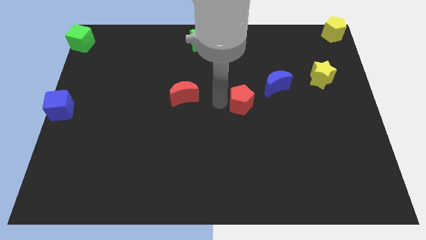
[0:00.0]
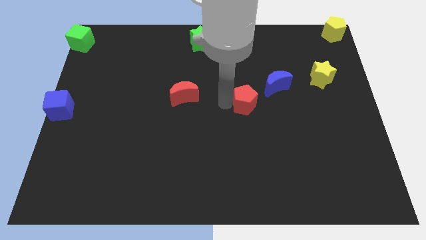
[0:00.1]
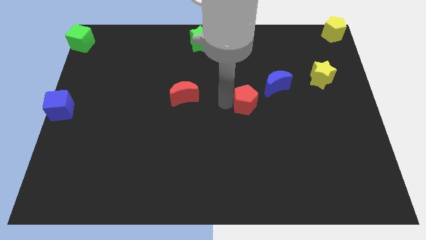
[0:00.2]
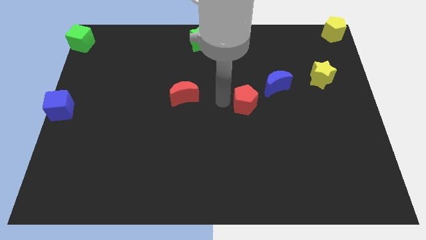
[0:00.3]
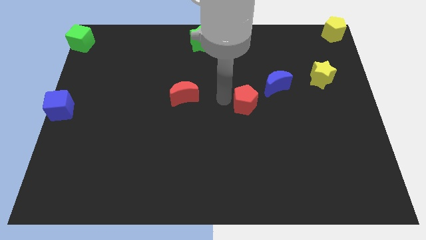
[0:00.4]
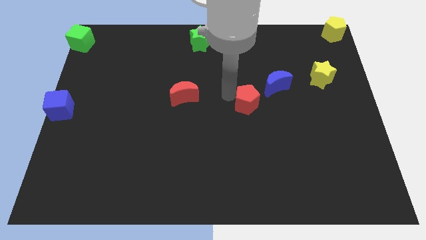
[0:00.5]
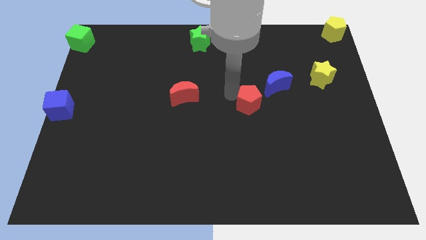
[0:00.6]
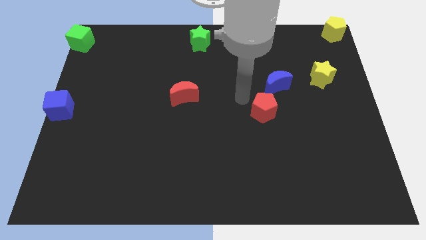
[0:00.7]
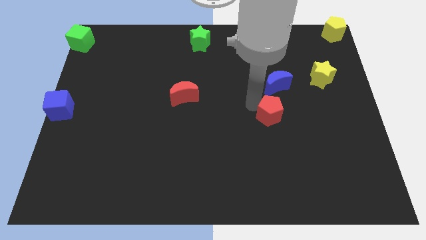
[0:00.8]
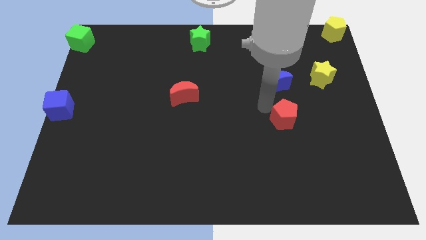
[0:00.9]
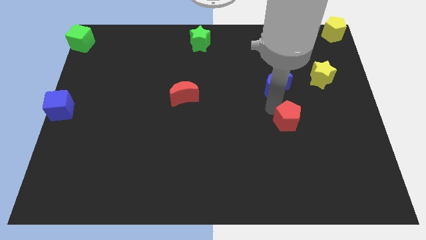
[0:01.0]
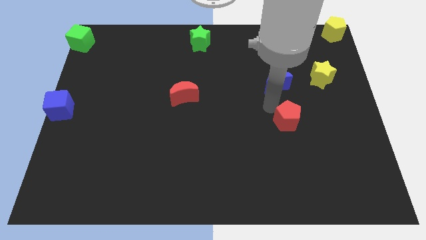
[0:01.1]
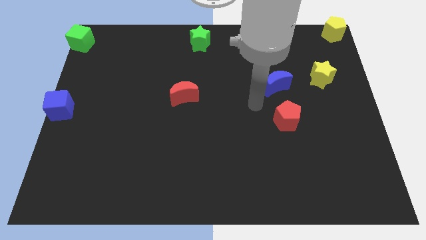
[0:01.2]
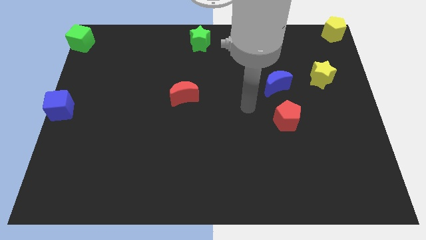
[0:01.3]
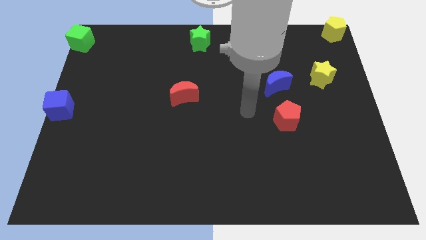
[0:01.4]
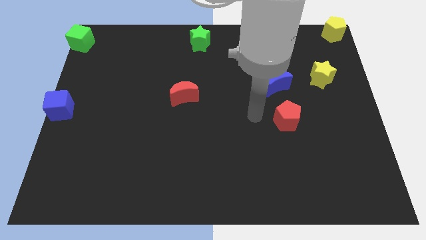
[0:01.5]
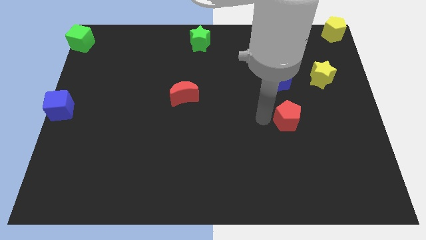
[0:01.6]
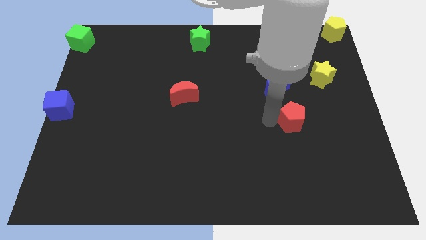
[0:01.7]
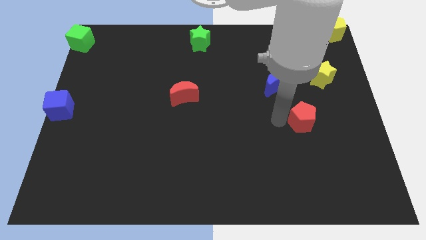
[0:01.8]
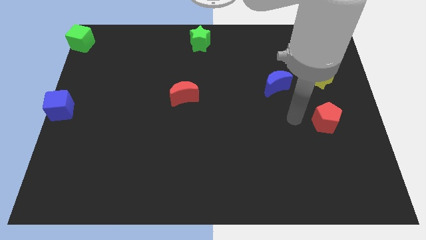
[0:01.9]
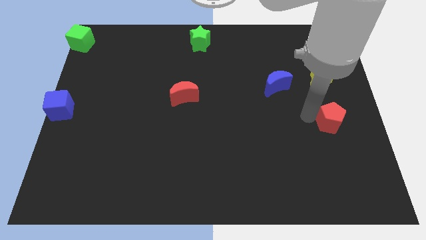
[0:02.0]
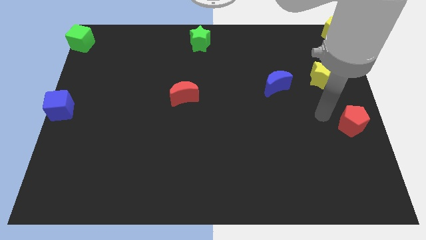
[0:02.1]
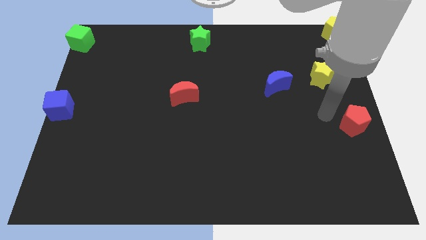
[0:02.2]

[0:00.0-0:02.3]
place the red pentagon diagonal below the yellow star

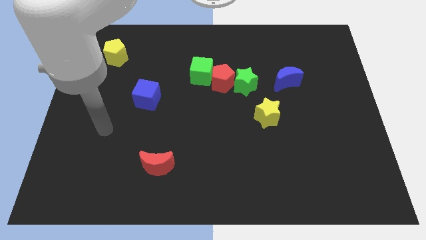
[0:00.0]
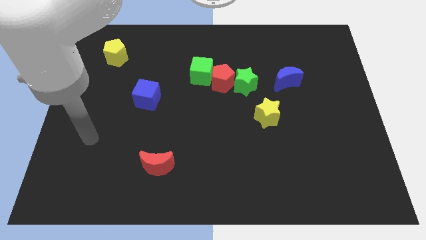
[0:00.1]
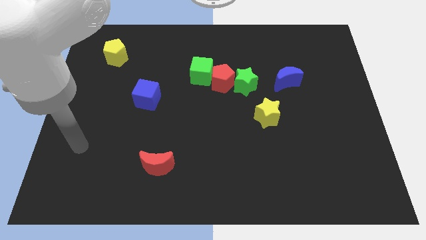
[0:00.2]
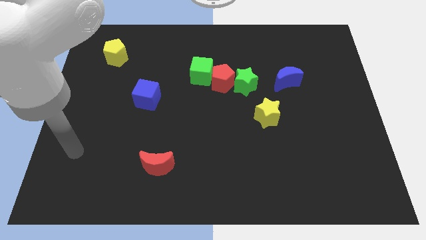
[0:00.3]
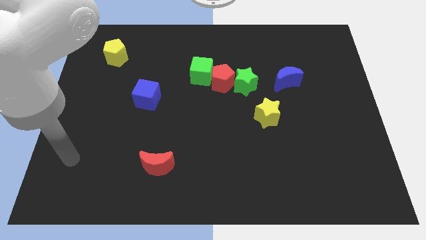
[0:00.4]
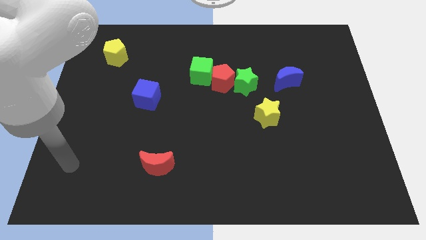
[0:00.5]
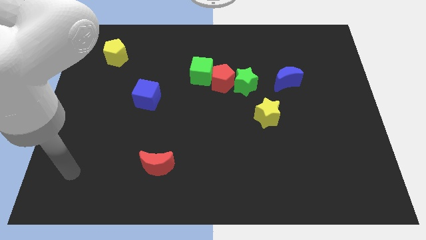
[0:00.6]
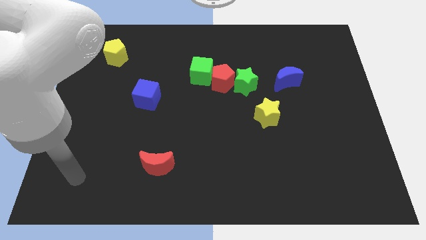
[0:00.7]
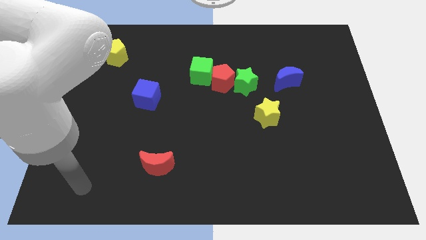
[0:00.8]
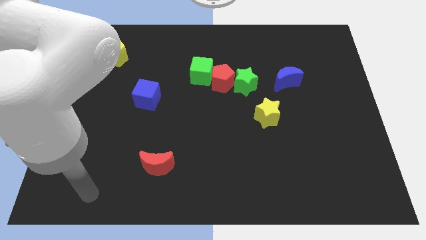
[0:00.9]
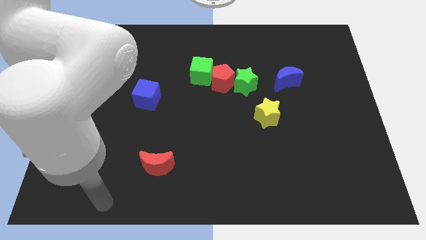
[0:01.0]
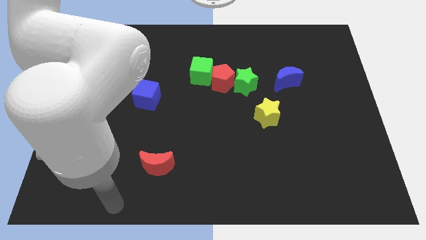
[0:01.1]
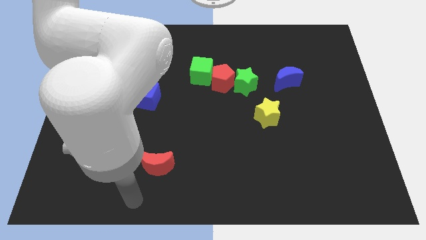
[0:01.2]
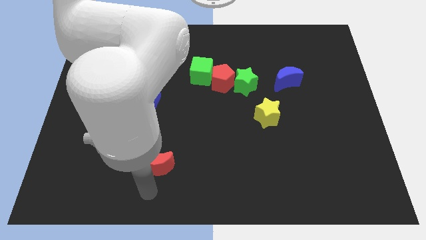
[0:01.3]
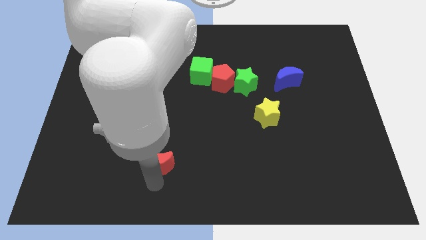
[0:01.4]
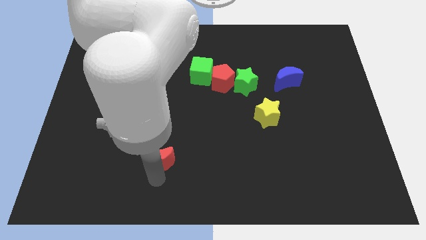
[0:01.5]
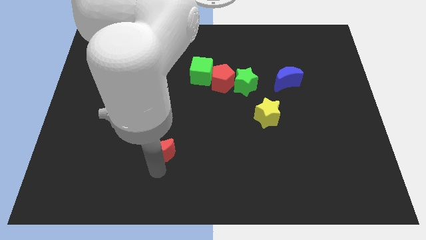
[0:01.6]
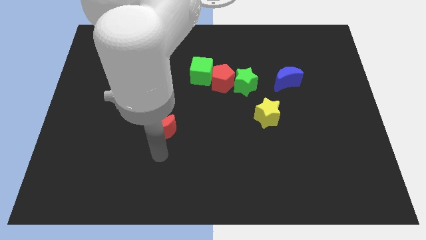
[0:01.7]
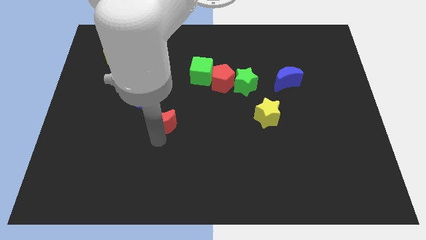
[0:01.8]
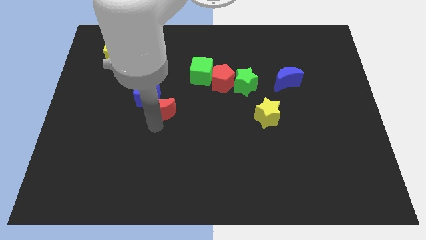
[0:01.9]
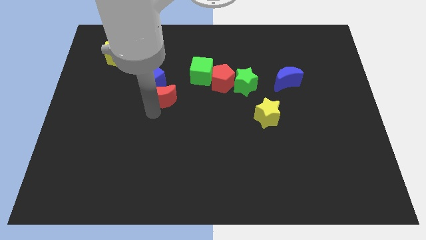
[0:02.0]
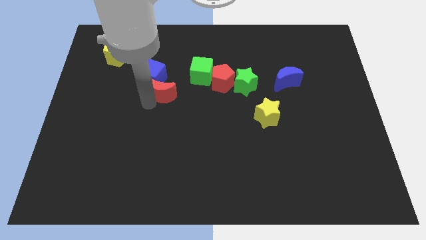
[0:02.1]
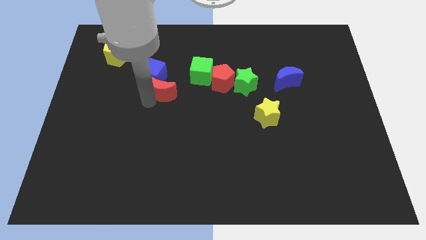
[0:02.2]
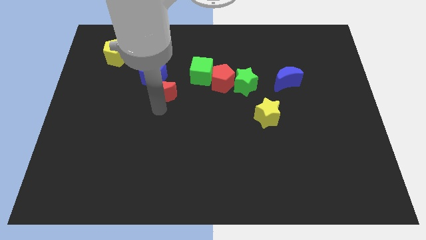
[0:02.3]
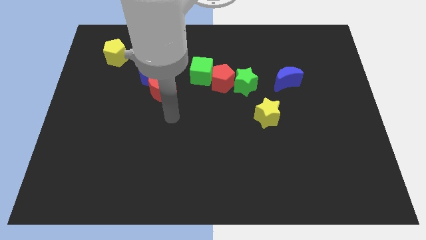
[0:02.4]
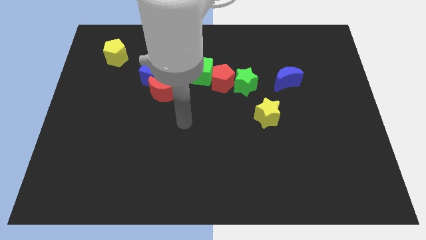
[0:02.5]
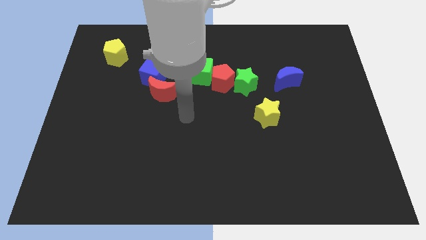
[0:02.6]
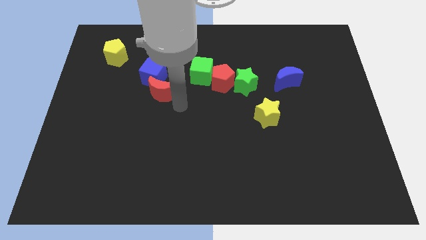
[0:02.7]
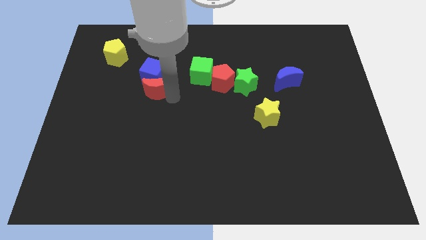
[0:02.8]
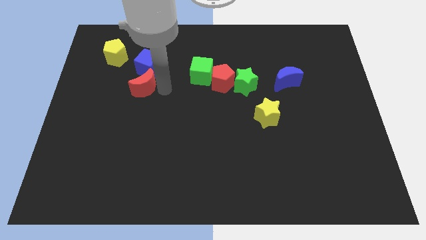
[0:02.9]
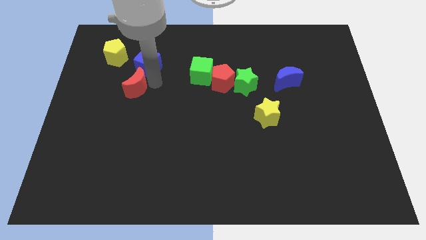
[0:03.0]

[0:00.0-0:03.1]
place the red moon down to the blue cube

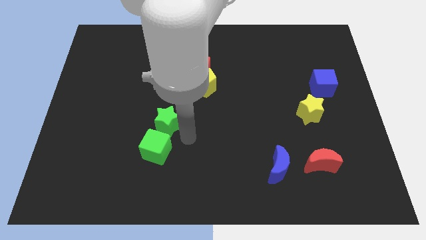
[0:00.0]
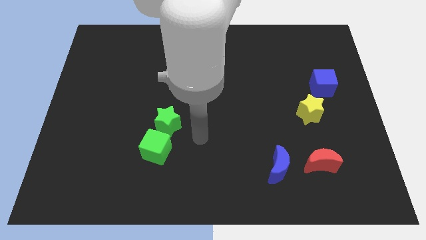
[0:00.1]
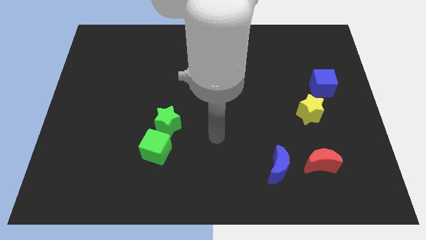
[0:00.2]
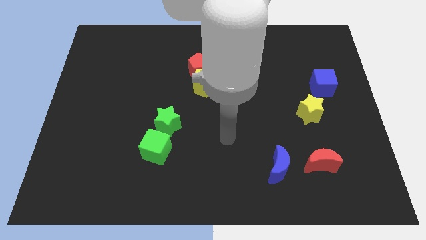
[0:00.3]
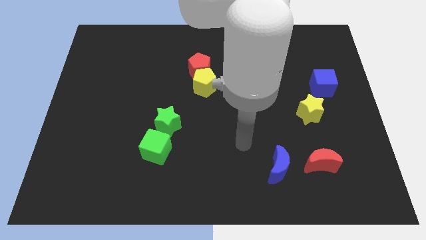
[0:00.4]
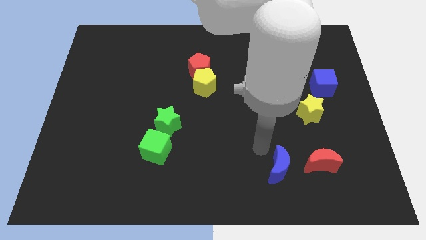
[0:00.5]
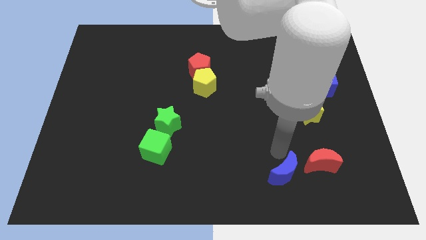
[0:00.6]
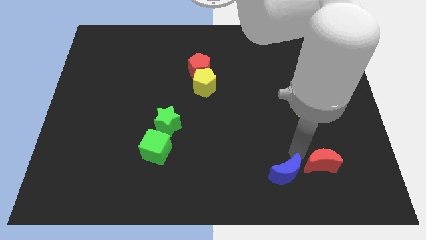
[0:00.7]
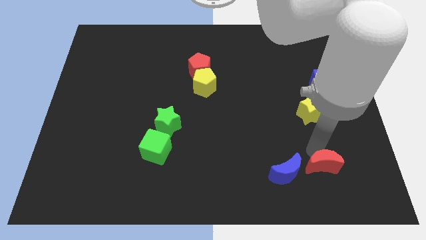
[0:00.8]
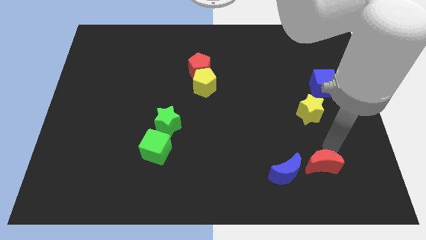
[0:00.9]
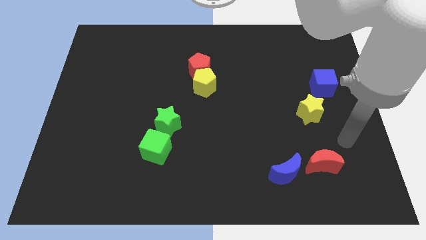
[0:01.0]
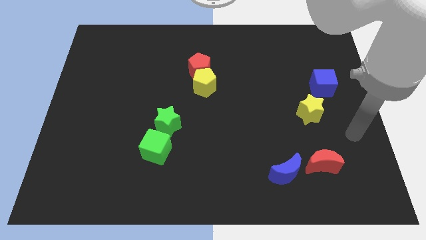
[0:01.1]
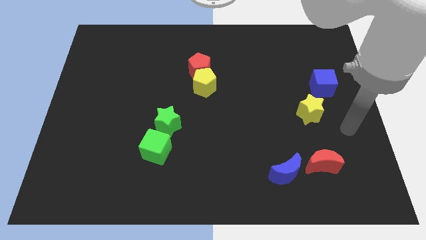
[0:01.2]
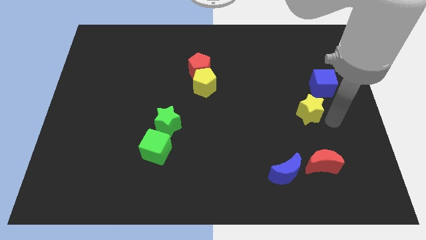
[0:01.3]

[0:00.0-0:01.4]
slightly touch the blue moon and red moon

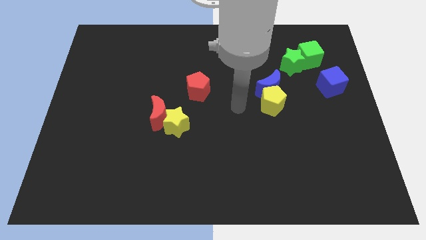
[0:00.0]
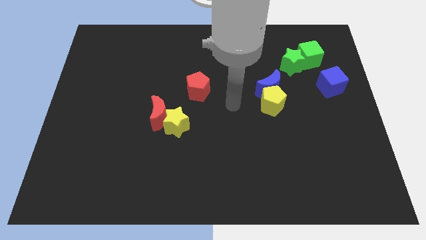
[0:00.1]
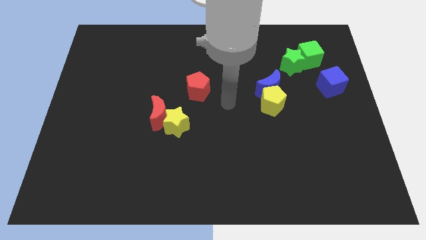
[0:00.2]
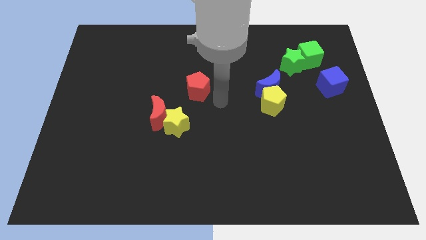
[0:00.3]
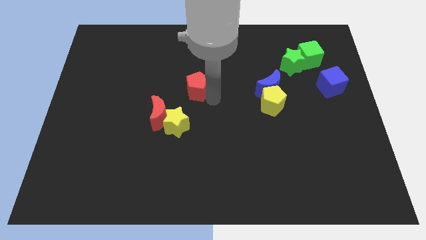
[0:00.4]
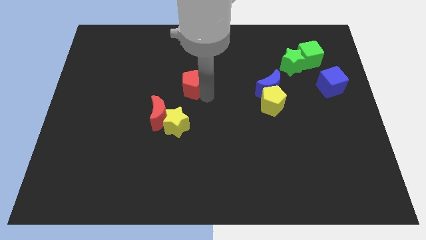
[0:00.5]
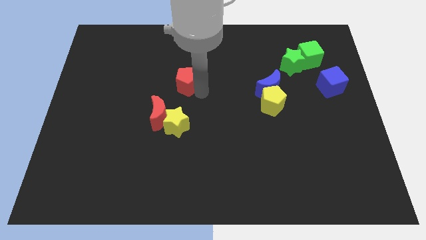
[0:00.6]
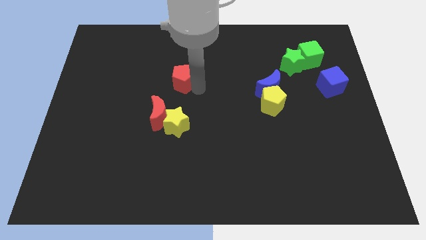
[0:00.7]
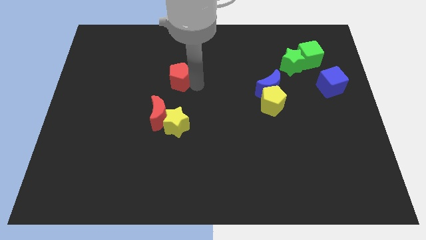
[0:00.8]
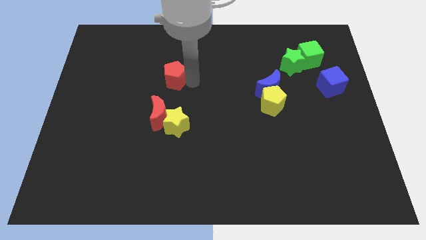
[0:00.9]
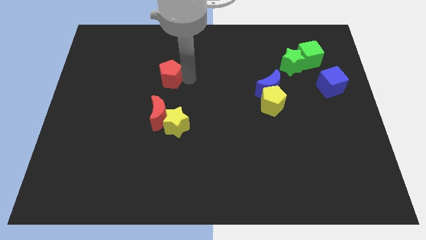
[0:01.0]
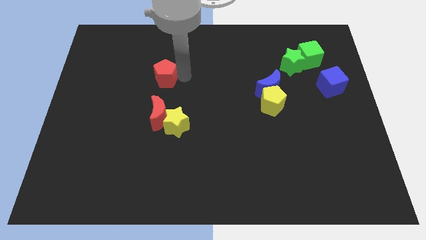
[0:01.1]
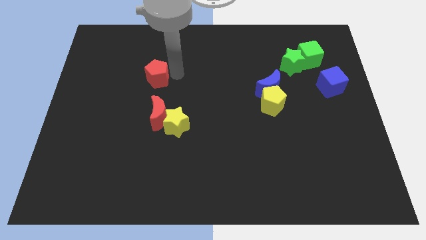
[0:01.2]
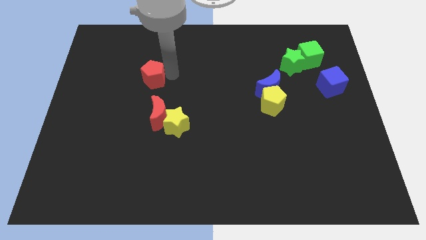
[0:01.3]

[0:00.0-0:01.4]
move the red pentagon above the red moon

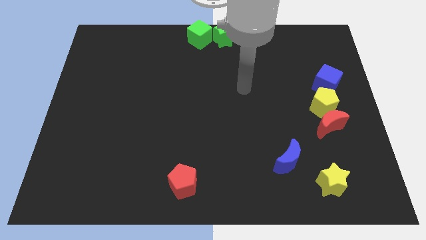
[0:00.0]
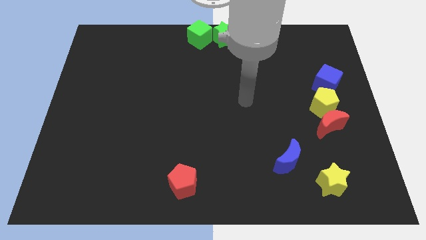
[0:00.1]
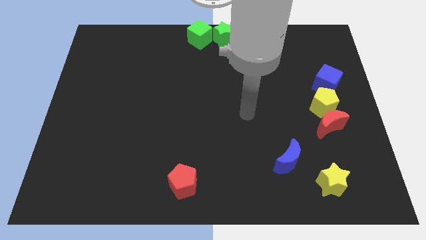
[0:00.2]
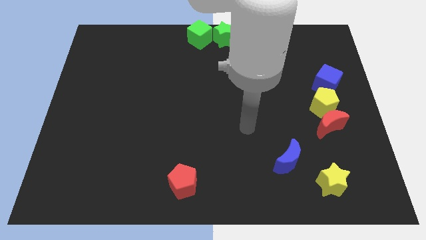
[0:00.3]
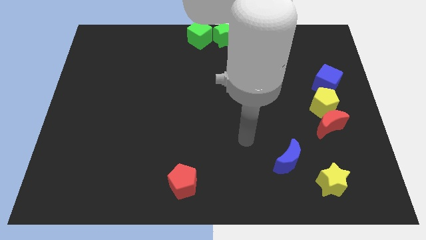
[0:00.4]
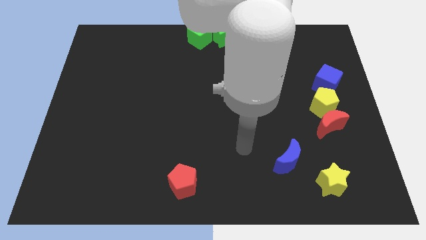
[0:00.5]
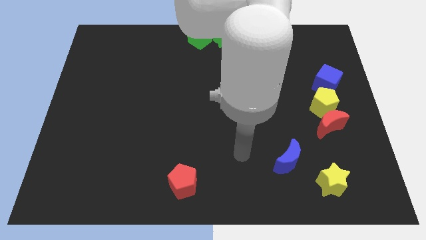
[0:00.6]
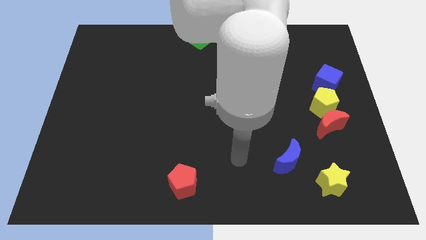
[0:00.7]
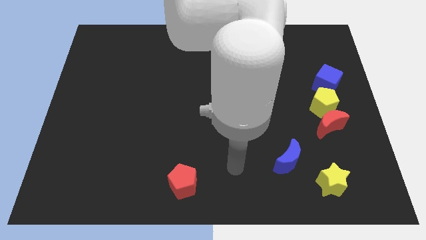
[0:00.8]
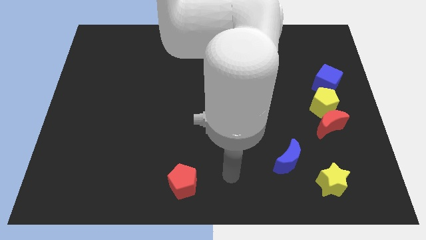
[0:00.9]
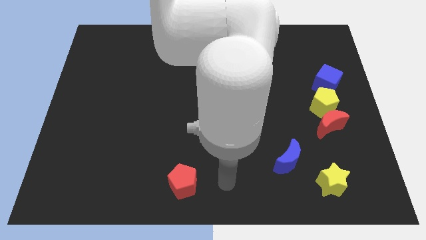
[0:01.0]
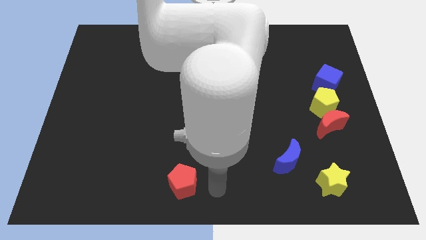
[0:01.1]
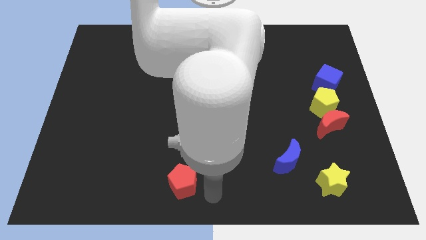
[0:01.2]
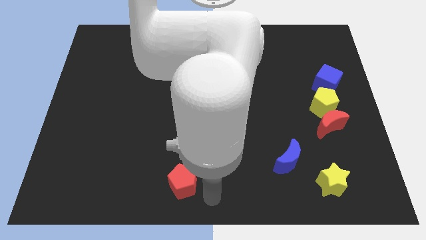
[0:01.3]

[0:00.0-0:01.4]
move the arm towards the bottom center of the board
